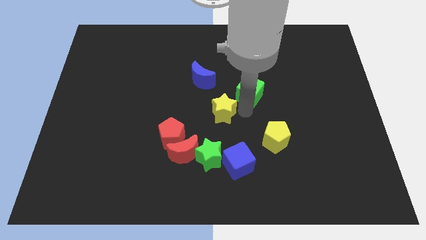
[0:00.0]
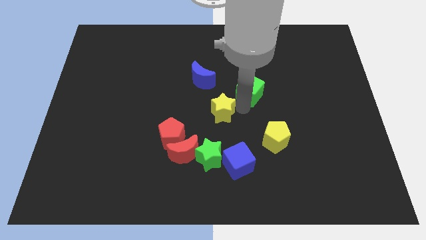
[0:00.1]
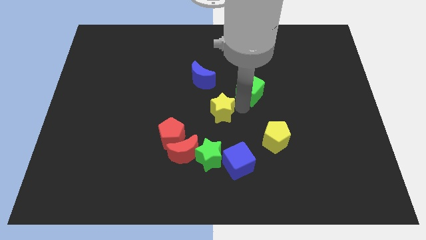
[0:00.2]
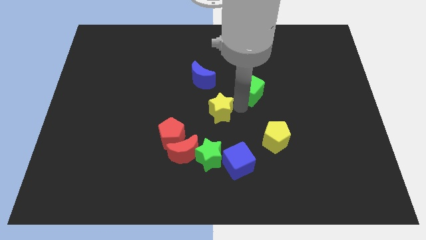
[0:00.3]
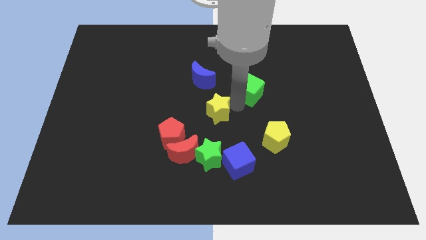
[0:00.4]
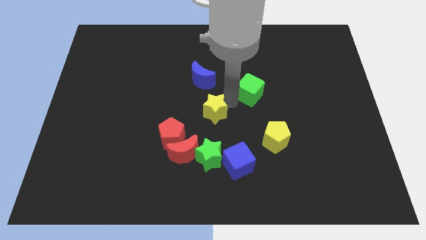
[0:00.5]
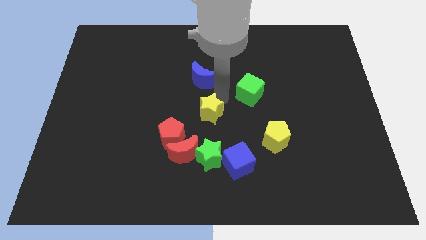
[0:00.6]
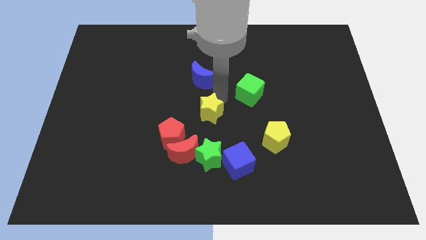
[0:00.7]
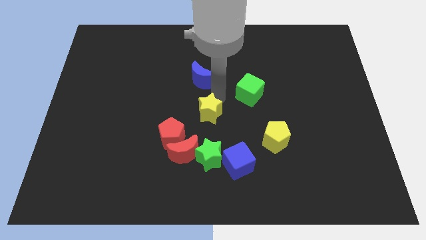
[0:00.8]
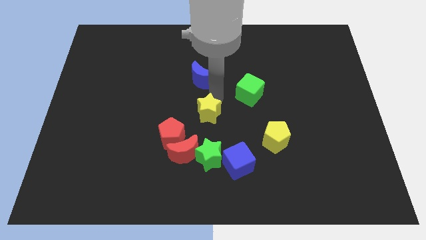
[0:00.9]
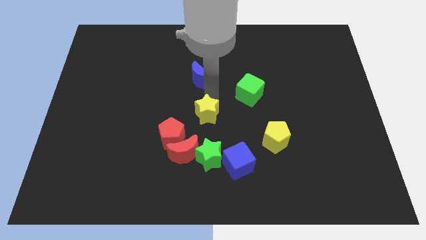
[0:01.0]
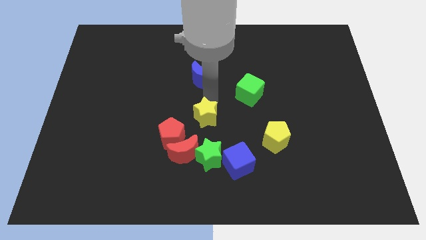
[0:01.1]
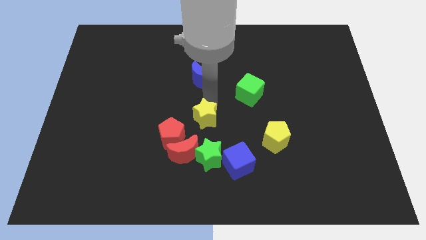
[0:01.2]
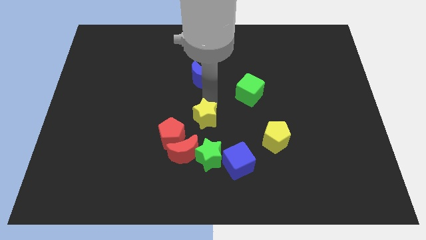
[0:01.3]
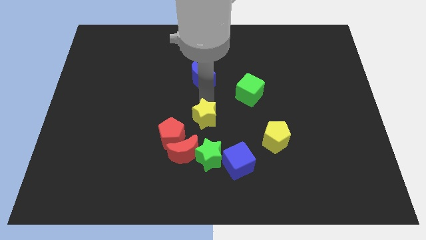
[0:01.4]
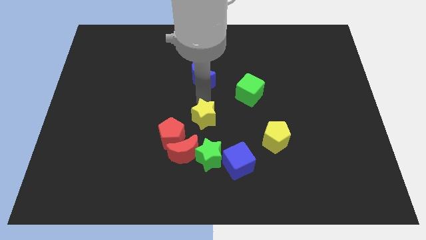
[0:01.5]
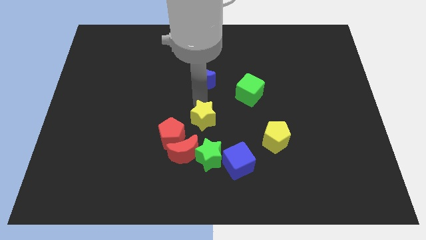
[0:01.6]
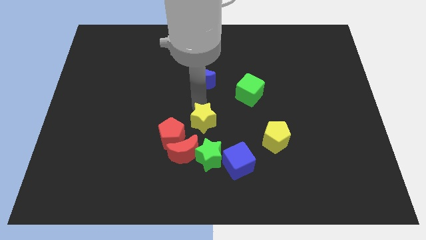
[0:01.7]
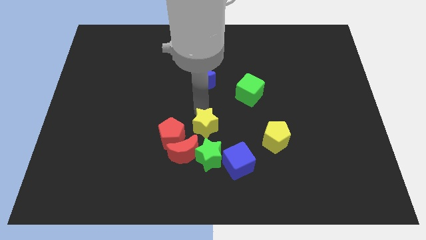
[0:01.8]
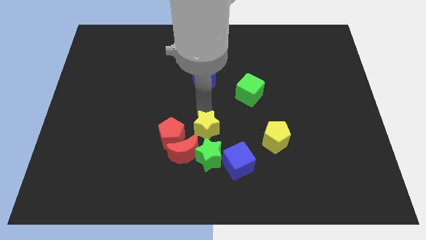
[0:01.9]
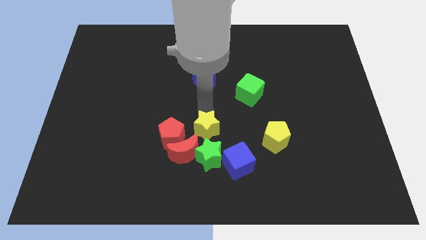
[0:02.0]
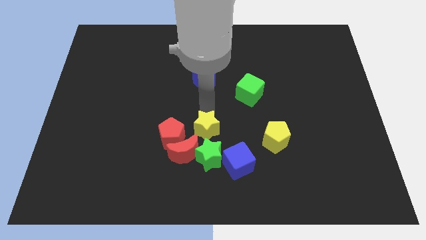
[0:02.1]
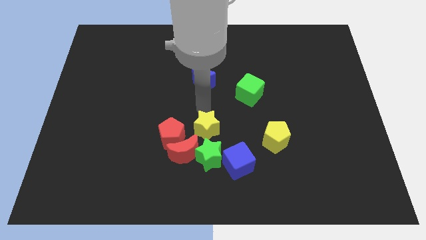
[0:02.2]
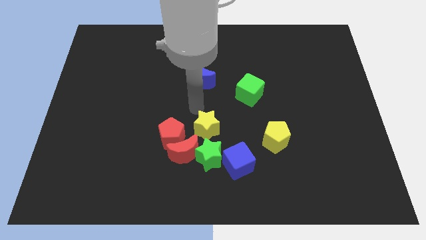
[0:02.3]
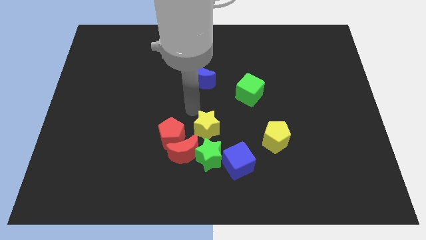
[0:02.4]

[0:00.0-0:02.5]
move the yellow star above the green star

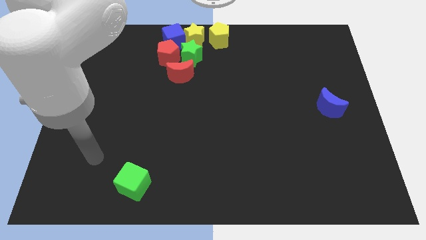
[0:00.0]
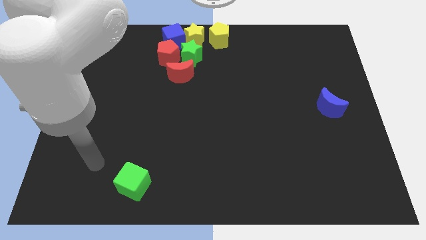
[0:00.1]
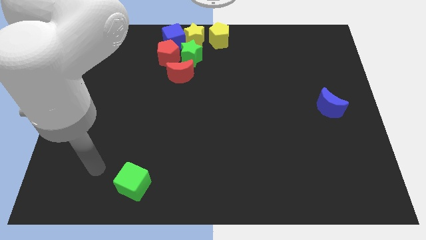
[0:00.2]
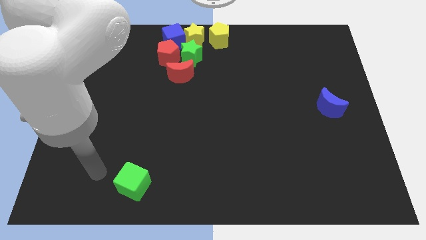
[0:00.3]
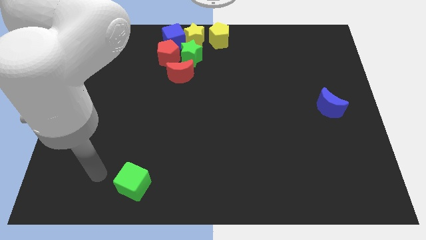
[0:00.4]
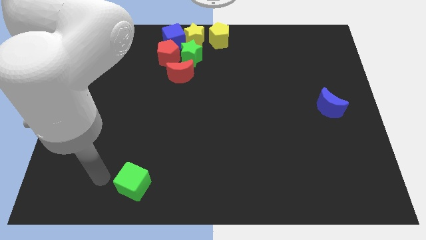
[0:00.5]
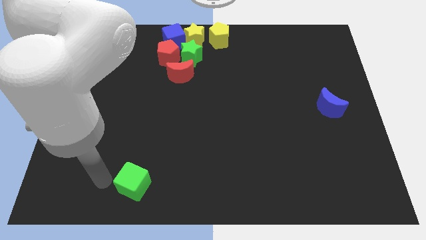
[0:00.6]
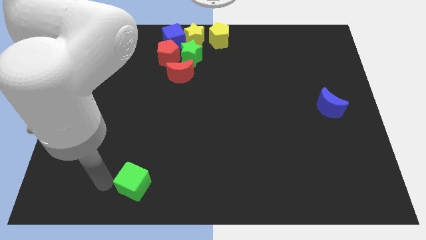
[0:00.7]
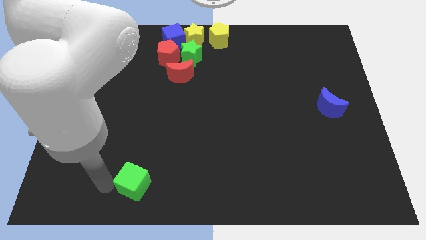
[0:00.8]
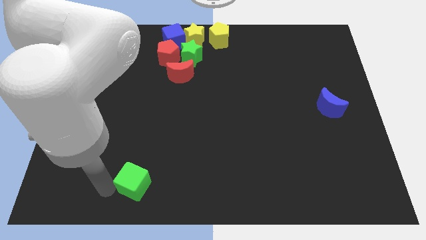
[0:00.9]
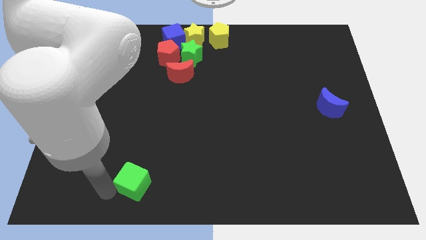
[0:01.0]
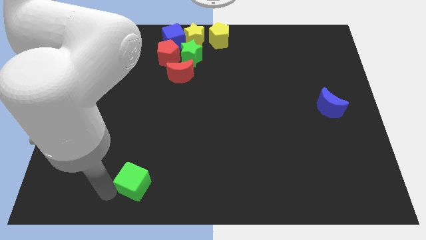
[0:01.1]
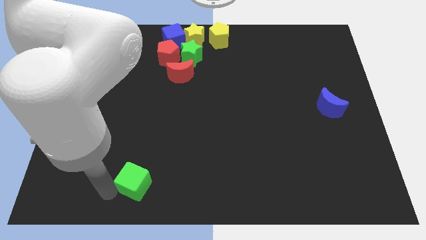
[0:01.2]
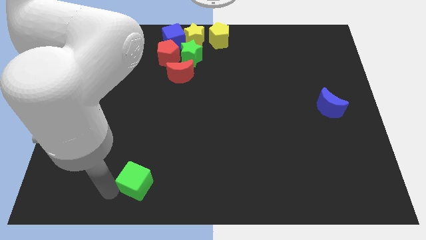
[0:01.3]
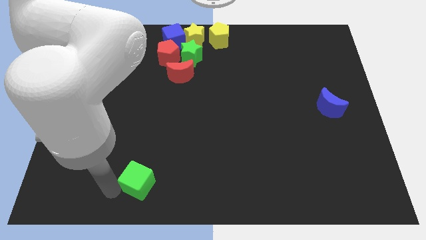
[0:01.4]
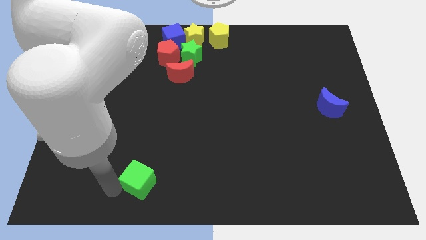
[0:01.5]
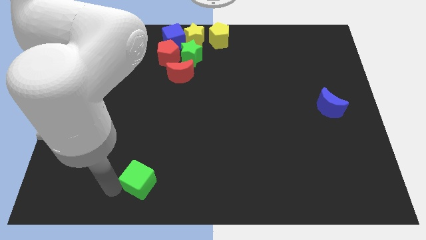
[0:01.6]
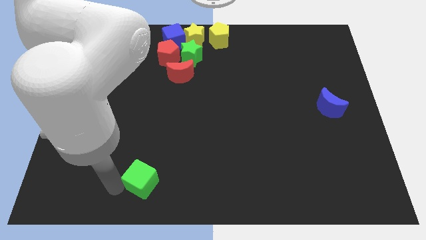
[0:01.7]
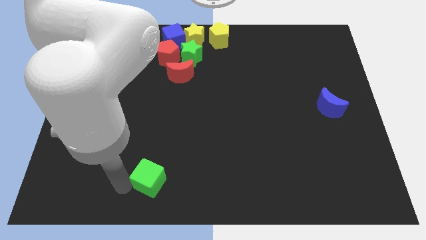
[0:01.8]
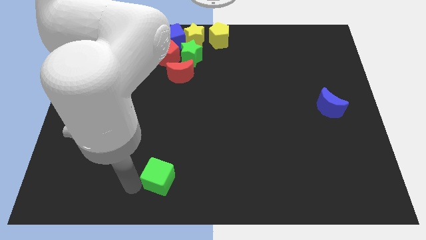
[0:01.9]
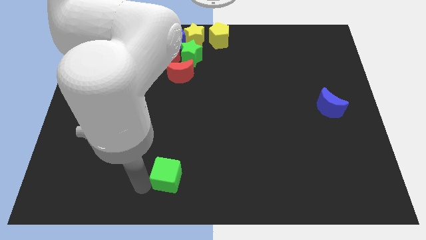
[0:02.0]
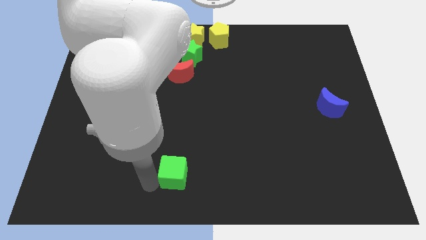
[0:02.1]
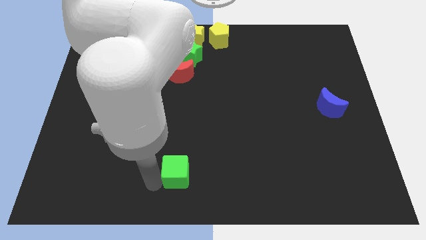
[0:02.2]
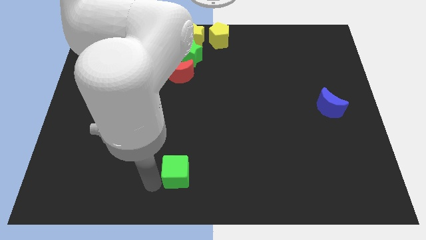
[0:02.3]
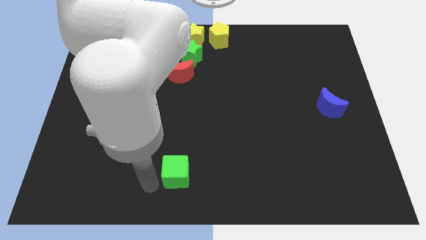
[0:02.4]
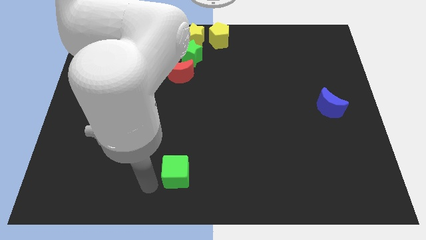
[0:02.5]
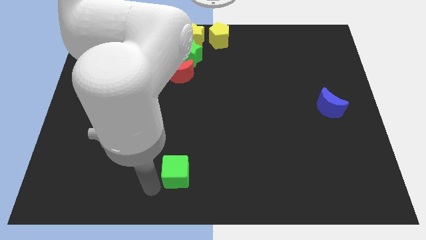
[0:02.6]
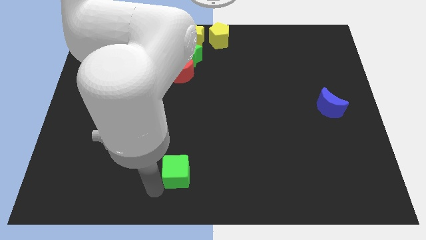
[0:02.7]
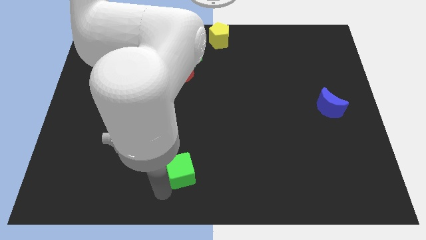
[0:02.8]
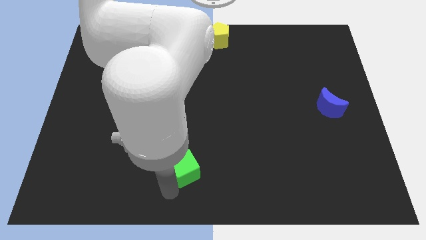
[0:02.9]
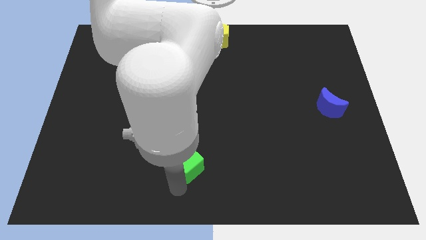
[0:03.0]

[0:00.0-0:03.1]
move the green cube towards right

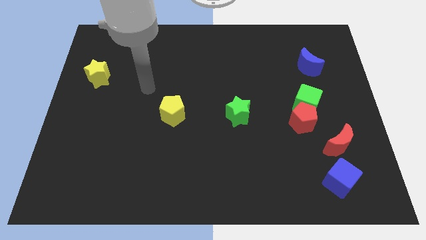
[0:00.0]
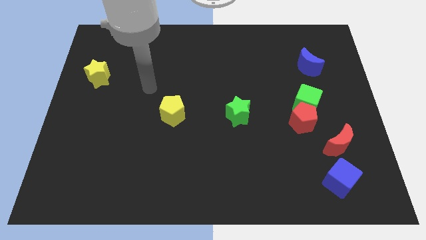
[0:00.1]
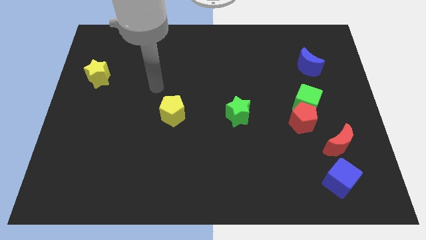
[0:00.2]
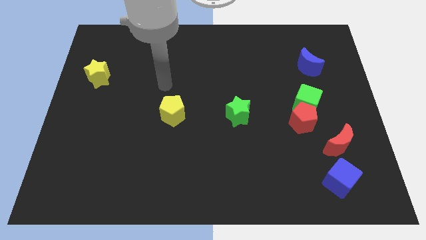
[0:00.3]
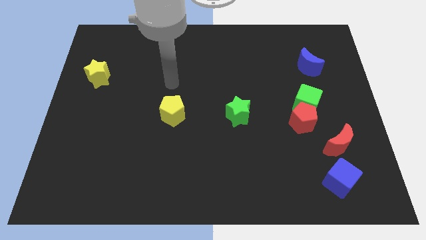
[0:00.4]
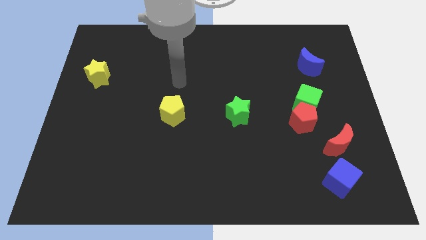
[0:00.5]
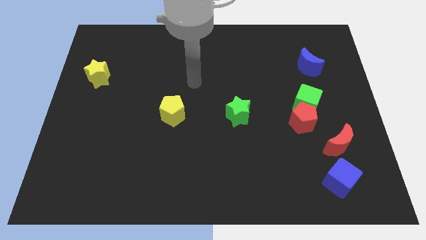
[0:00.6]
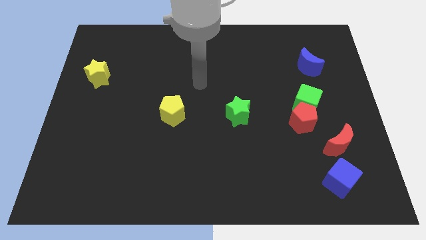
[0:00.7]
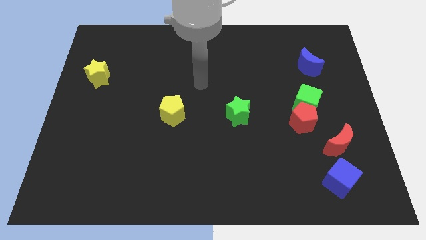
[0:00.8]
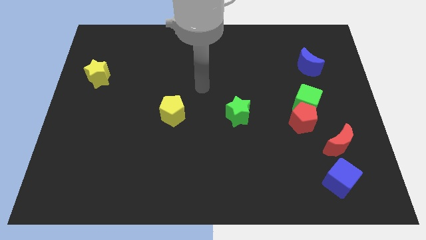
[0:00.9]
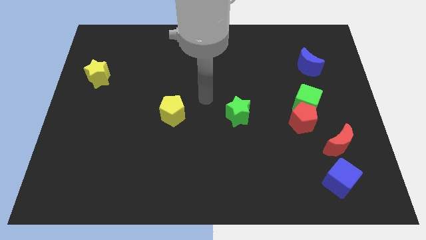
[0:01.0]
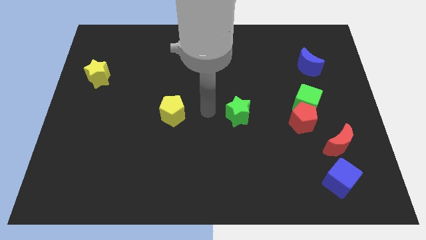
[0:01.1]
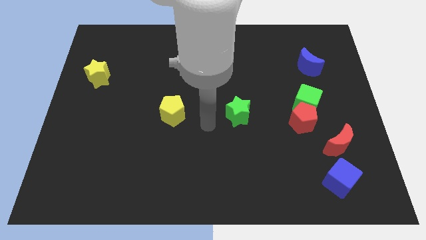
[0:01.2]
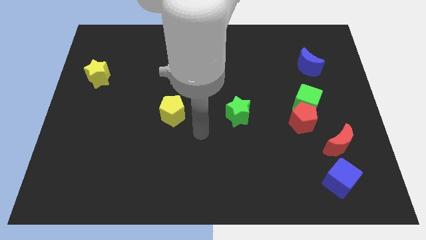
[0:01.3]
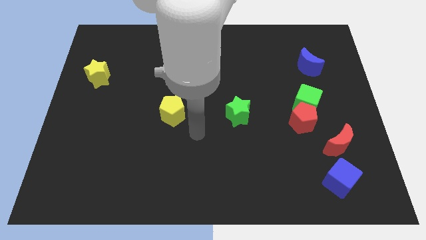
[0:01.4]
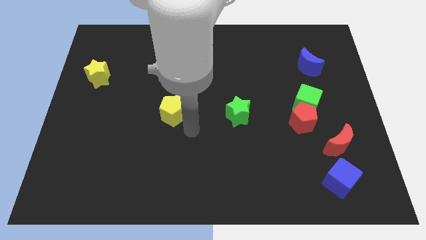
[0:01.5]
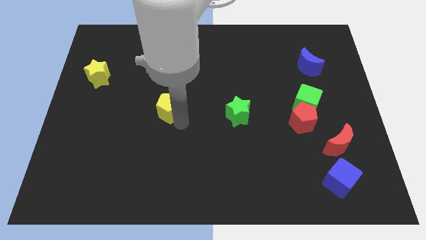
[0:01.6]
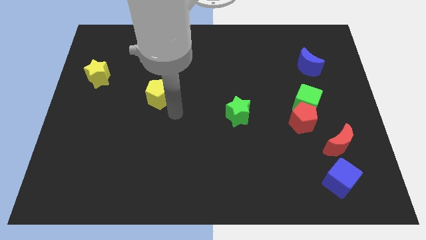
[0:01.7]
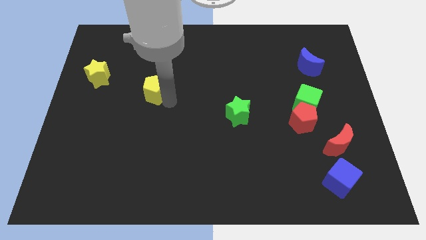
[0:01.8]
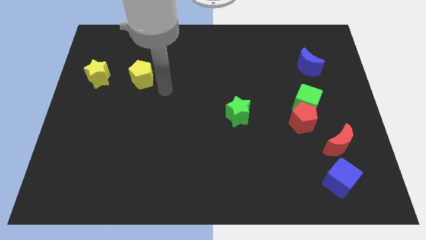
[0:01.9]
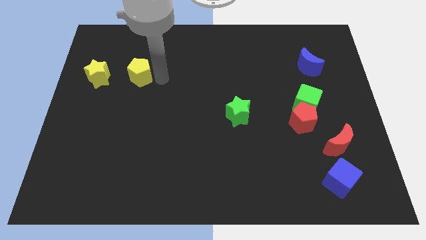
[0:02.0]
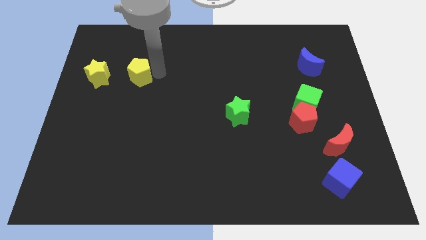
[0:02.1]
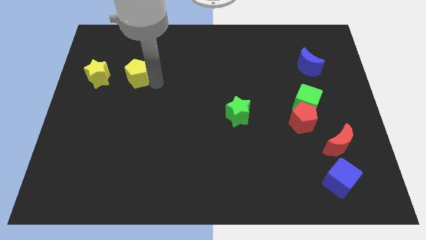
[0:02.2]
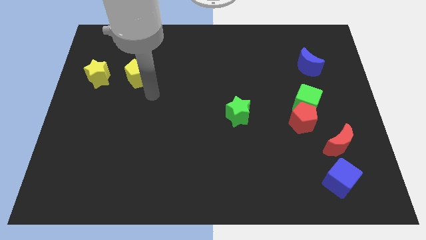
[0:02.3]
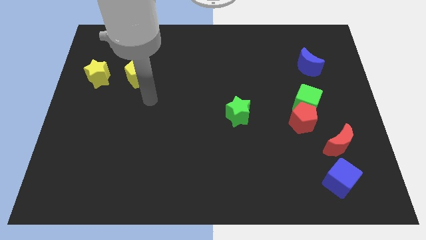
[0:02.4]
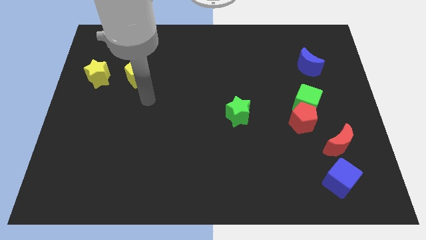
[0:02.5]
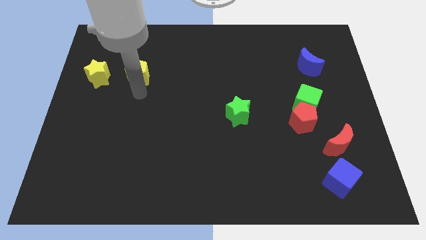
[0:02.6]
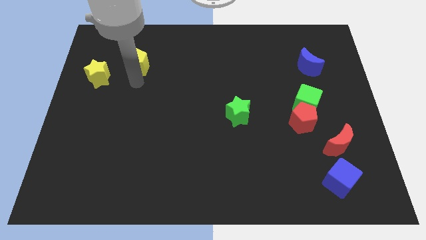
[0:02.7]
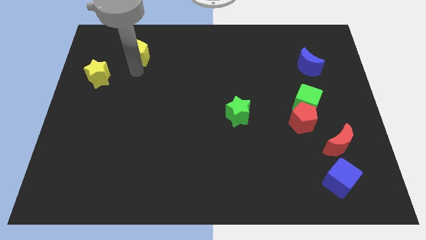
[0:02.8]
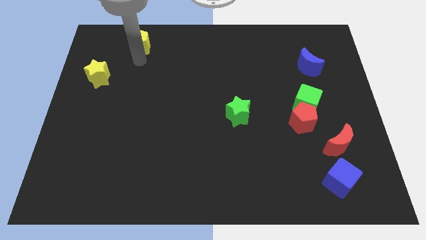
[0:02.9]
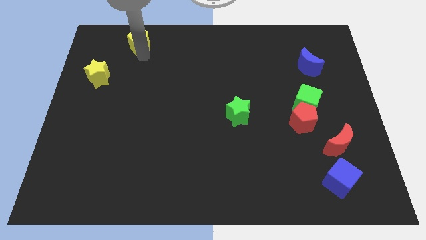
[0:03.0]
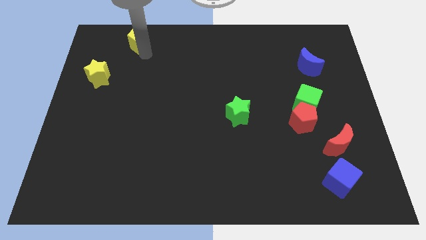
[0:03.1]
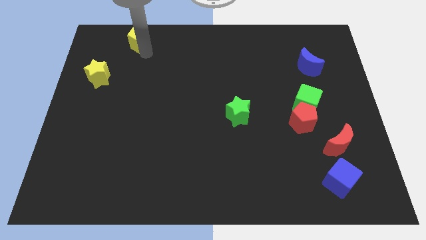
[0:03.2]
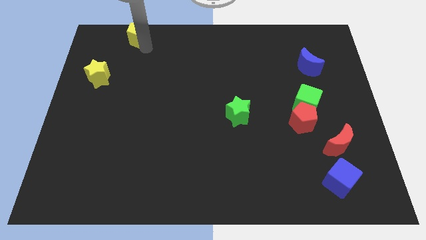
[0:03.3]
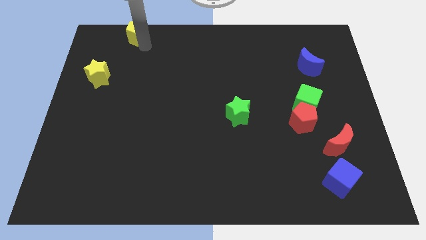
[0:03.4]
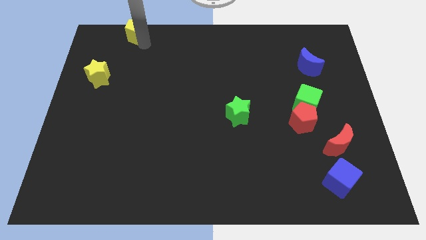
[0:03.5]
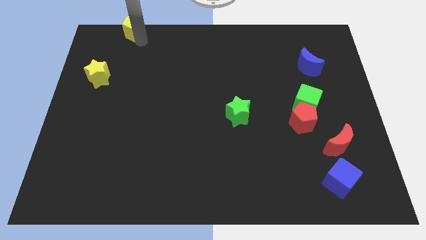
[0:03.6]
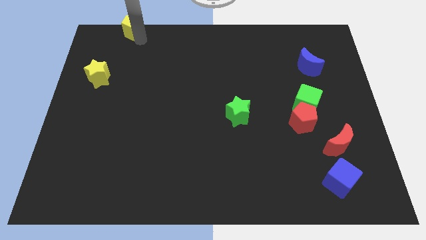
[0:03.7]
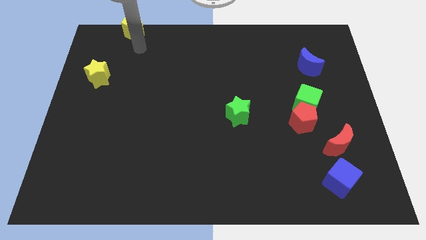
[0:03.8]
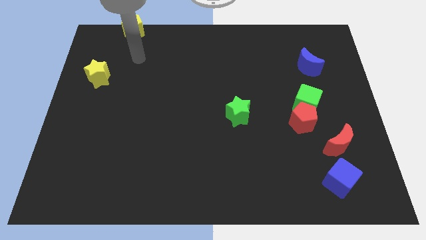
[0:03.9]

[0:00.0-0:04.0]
move the yellow pentagon to the top left corner of the board
